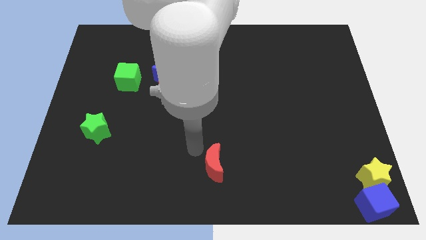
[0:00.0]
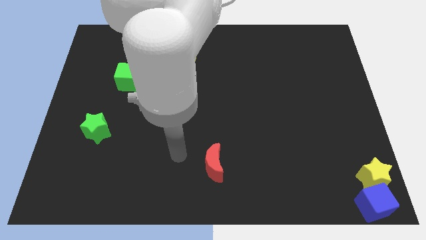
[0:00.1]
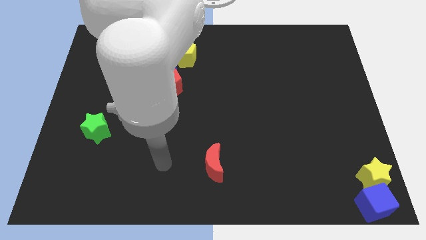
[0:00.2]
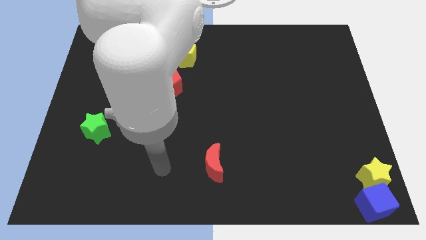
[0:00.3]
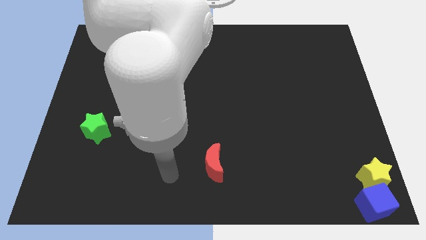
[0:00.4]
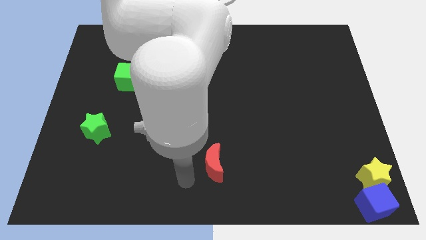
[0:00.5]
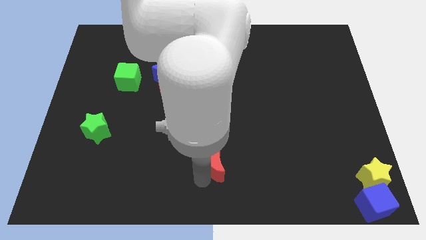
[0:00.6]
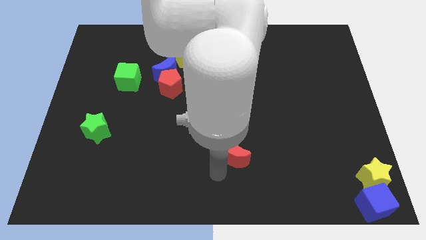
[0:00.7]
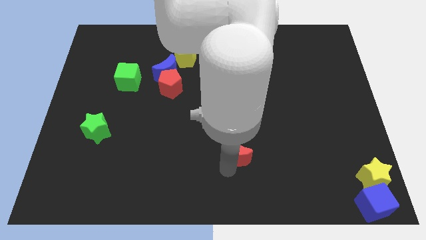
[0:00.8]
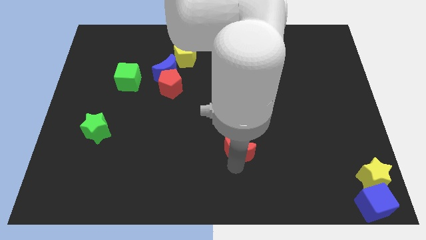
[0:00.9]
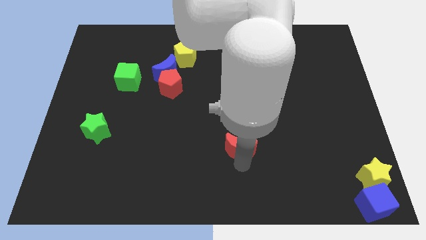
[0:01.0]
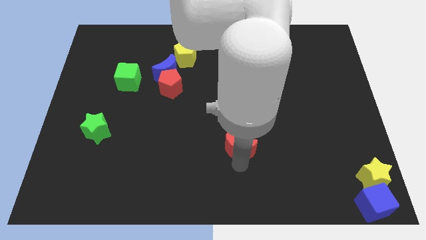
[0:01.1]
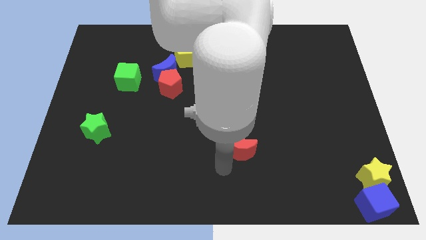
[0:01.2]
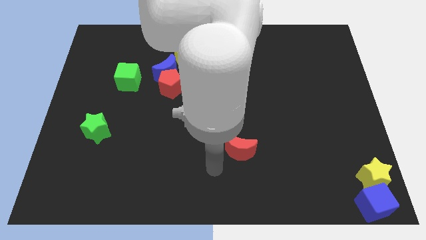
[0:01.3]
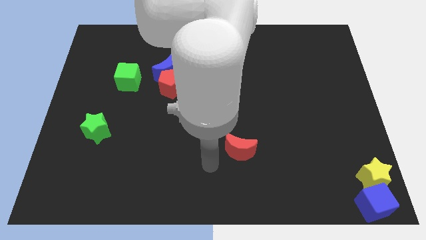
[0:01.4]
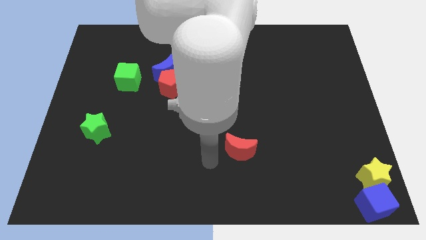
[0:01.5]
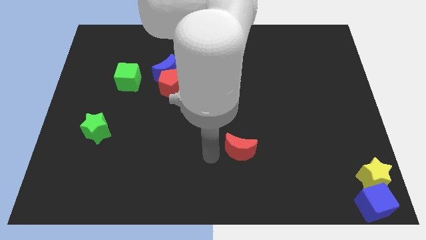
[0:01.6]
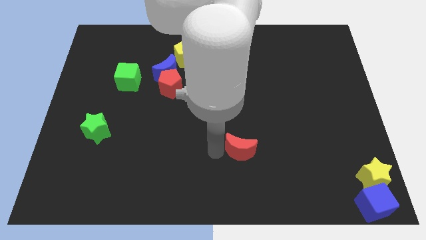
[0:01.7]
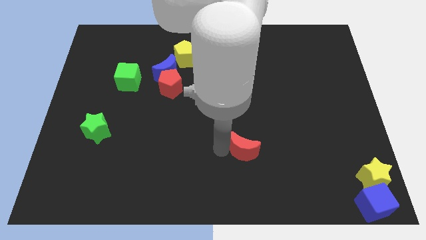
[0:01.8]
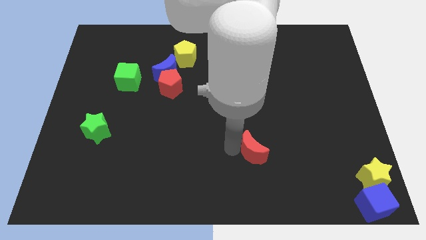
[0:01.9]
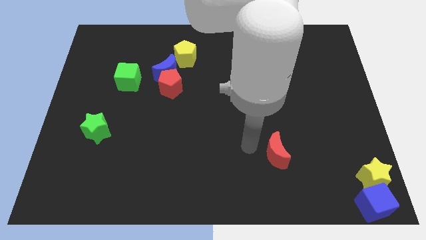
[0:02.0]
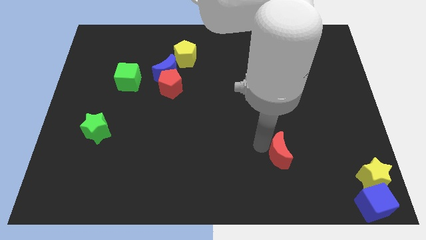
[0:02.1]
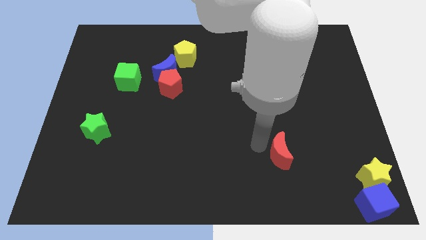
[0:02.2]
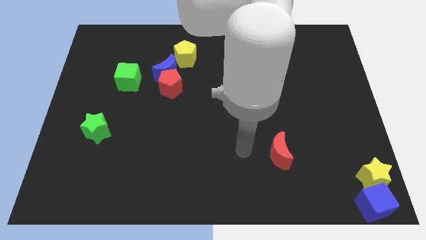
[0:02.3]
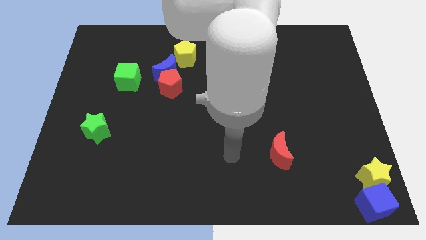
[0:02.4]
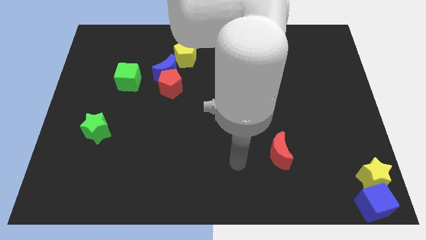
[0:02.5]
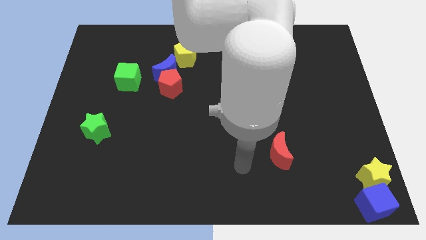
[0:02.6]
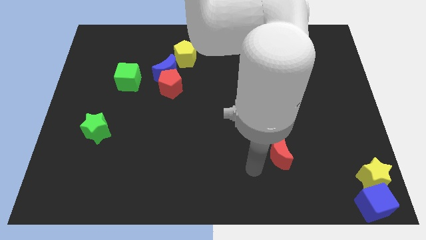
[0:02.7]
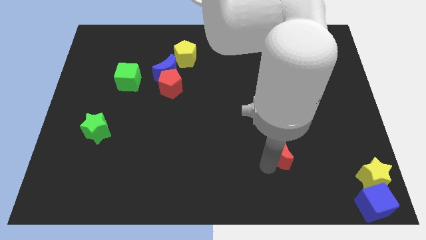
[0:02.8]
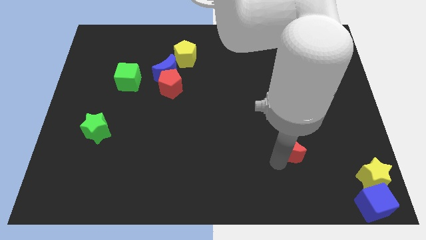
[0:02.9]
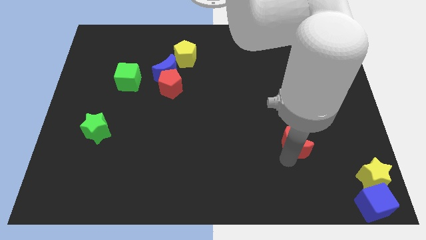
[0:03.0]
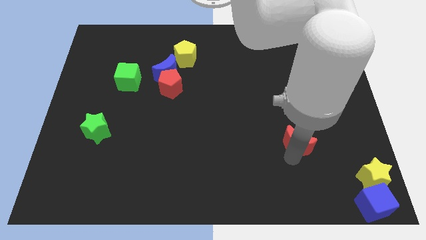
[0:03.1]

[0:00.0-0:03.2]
place the red crescent diagonal to the yellow star

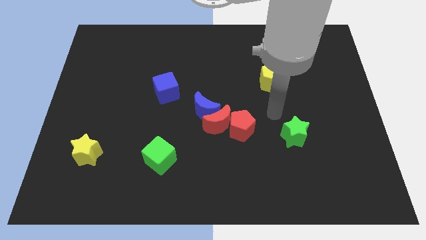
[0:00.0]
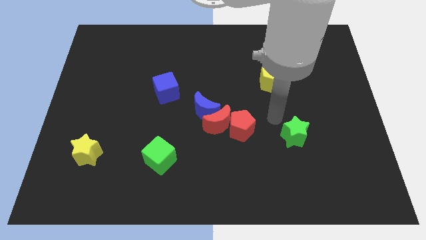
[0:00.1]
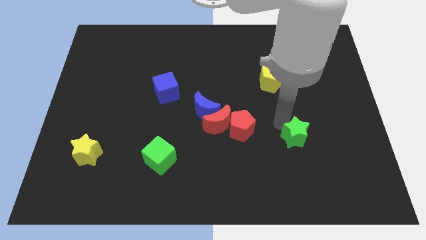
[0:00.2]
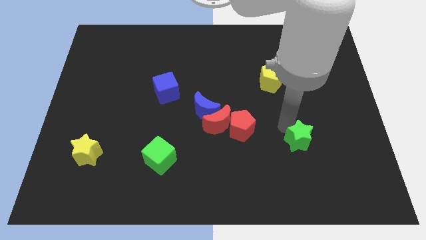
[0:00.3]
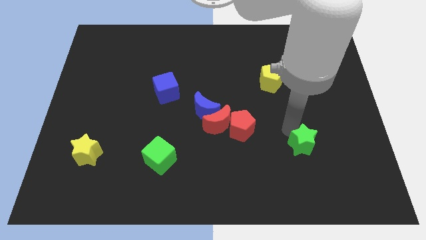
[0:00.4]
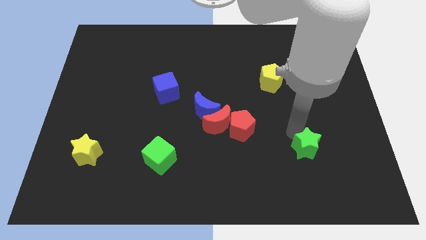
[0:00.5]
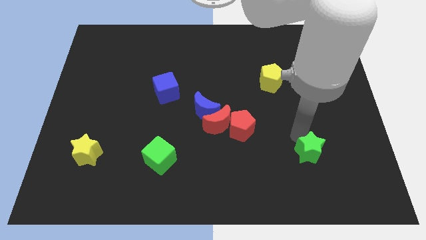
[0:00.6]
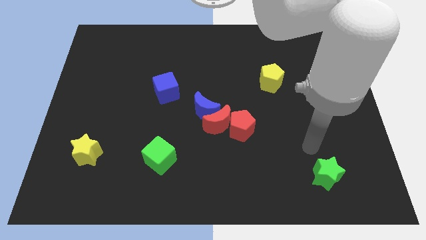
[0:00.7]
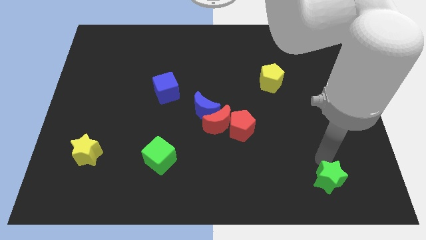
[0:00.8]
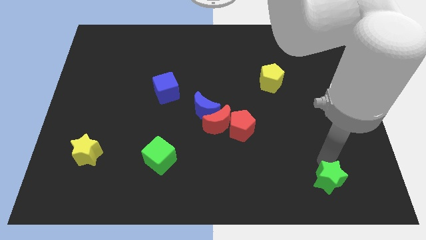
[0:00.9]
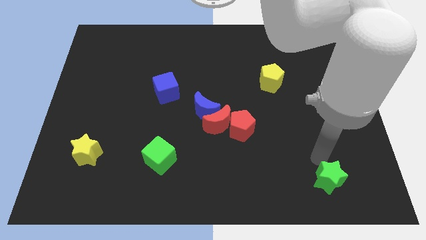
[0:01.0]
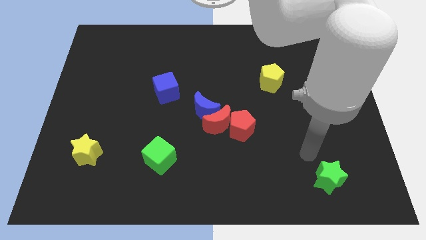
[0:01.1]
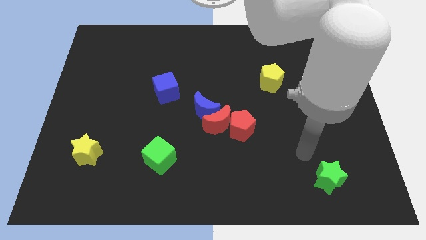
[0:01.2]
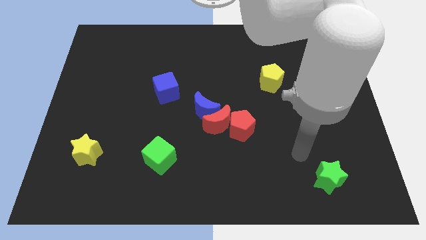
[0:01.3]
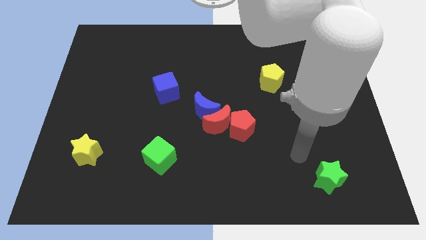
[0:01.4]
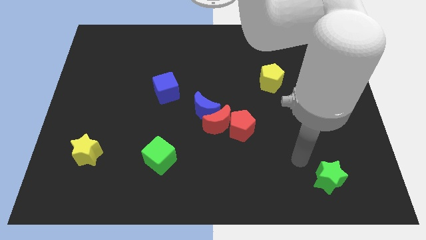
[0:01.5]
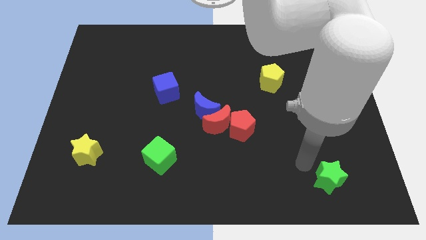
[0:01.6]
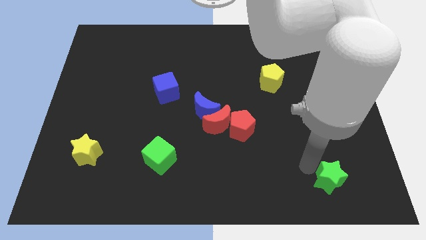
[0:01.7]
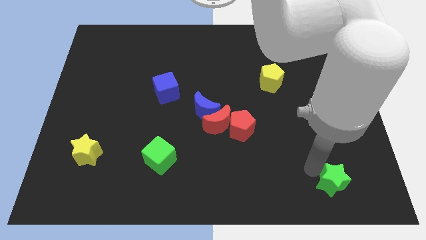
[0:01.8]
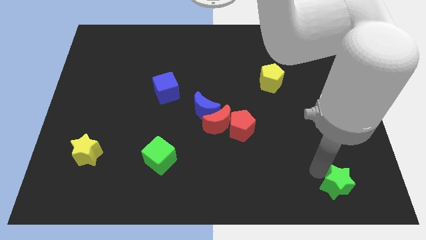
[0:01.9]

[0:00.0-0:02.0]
push the green star slightly to the bottom side of the board

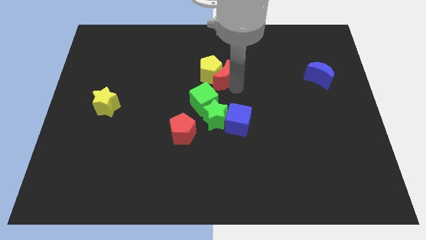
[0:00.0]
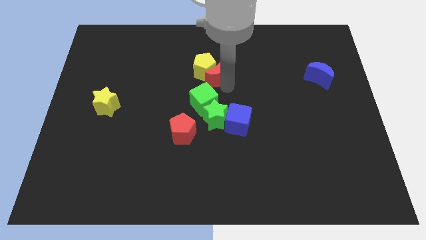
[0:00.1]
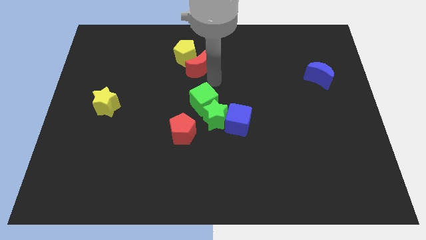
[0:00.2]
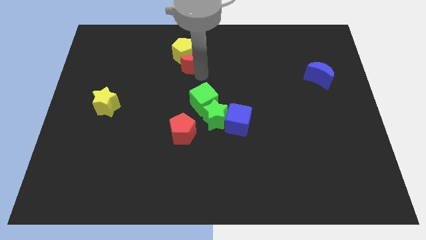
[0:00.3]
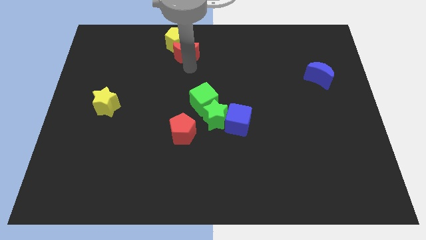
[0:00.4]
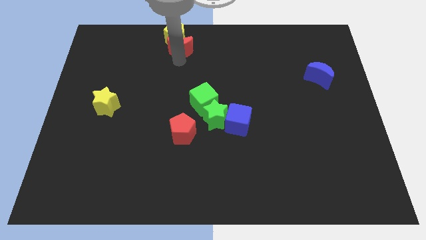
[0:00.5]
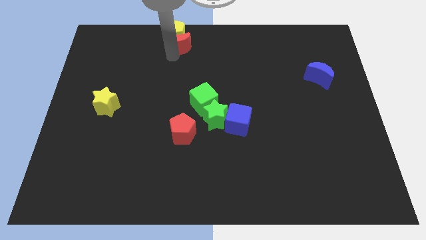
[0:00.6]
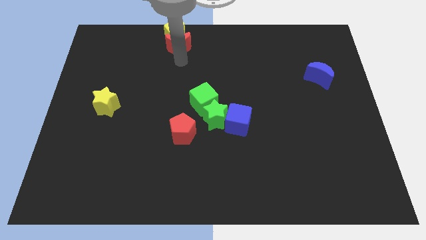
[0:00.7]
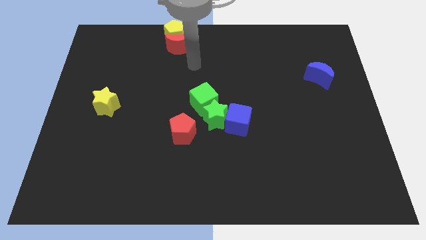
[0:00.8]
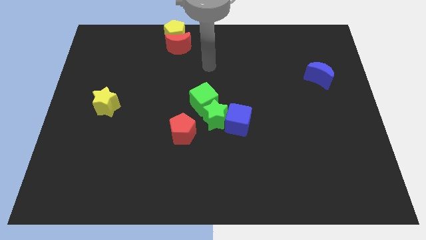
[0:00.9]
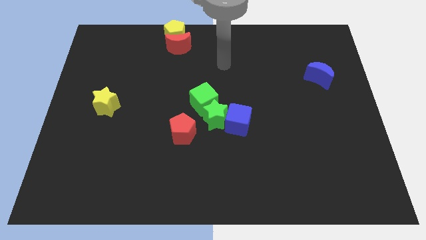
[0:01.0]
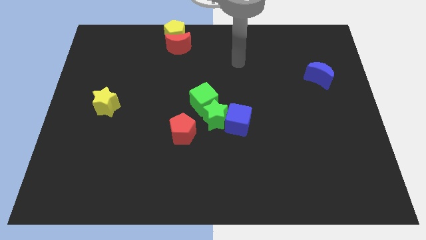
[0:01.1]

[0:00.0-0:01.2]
push the yellow pentagon and red moon towards the top side

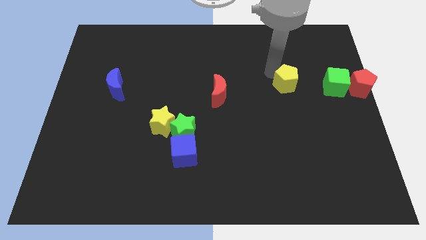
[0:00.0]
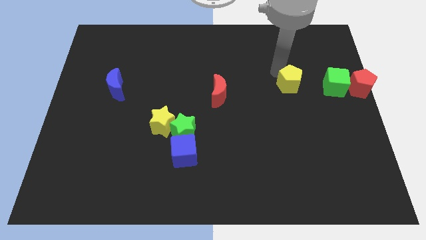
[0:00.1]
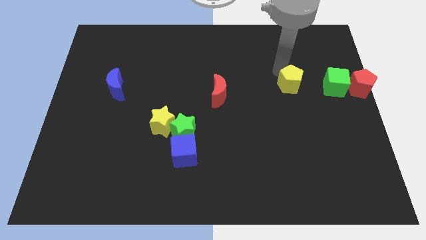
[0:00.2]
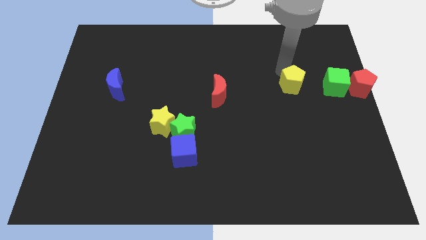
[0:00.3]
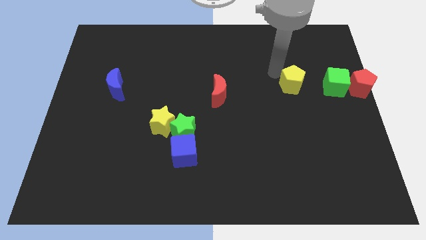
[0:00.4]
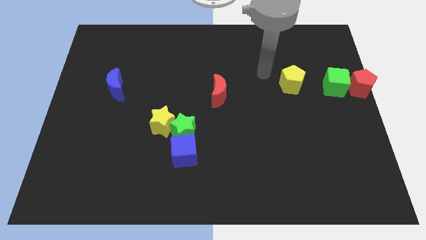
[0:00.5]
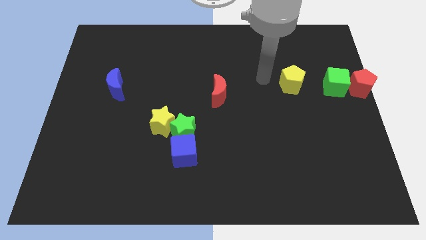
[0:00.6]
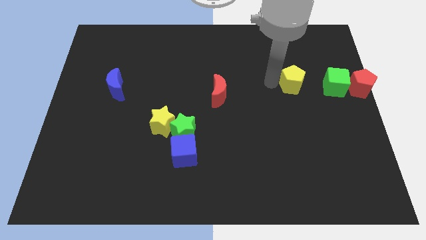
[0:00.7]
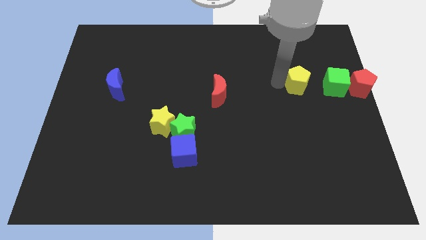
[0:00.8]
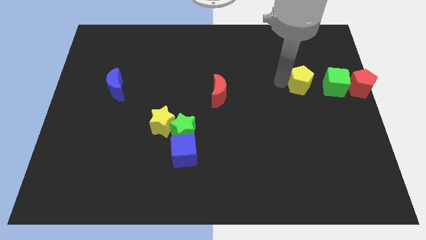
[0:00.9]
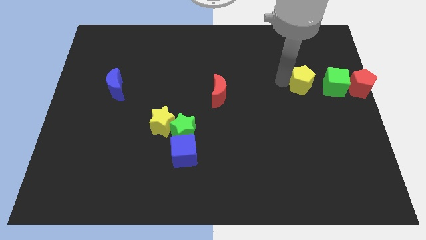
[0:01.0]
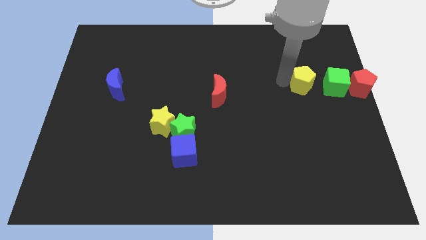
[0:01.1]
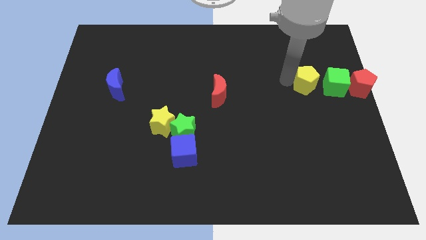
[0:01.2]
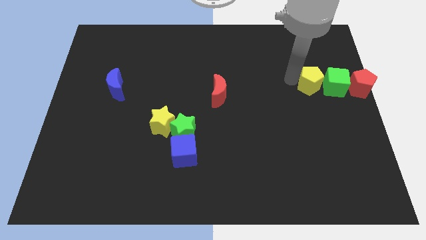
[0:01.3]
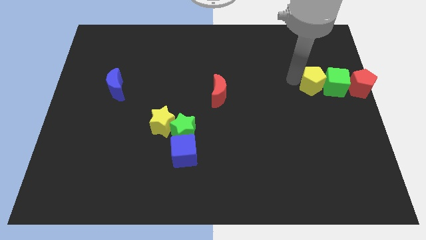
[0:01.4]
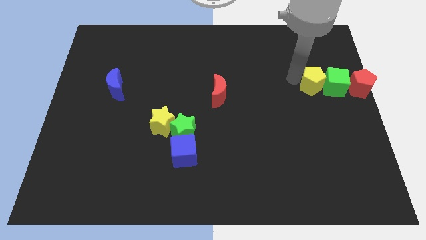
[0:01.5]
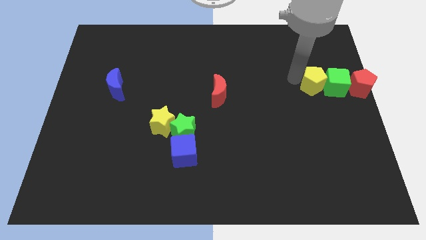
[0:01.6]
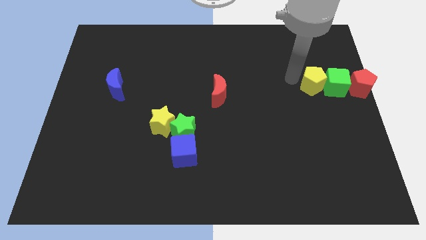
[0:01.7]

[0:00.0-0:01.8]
move the yellow pentagon left to the green cube

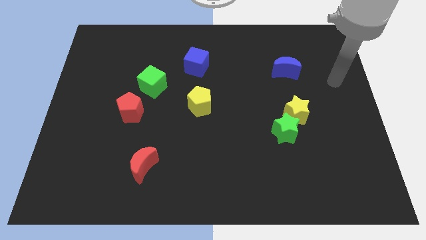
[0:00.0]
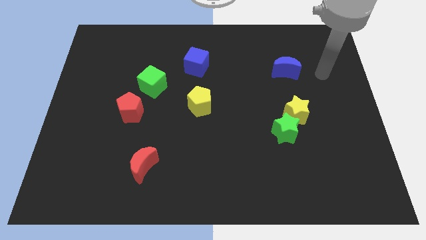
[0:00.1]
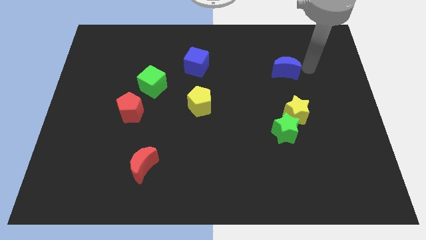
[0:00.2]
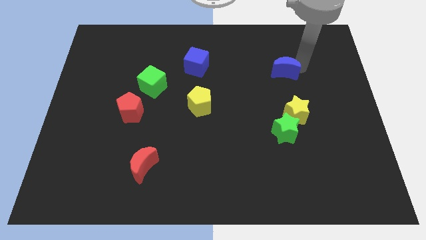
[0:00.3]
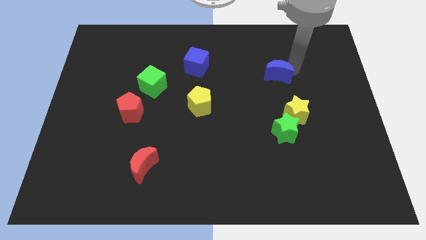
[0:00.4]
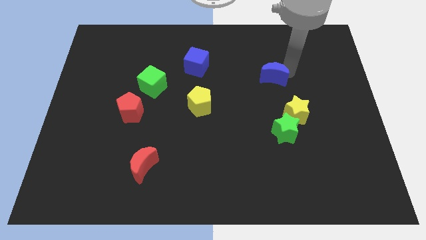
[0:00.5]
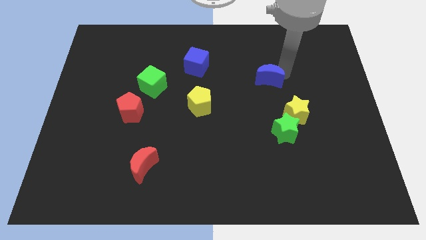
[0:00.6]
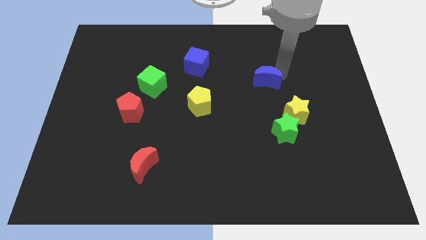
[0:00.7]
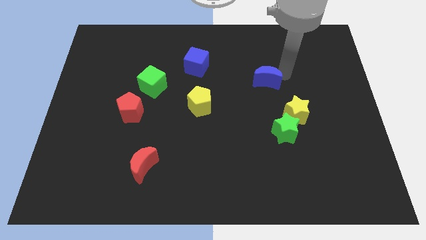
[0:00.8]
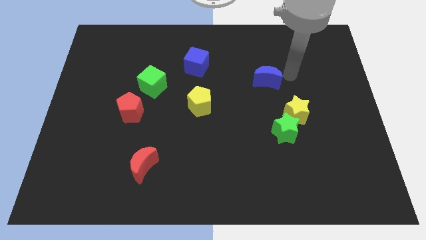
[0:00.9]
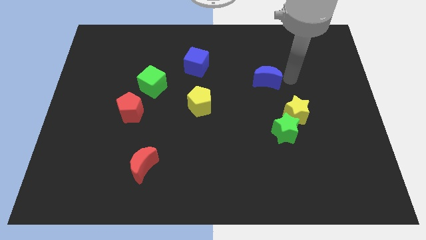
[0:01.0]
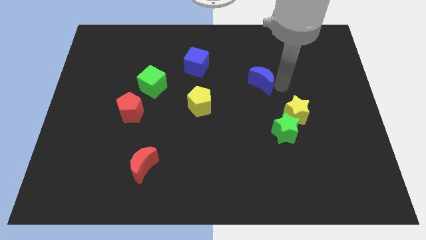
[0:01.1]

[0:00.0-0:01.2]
push the red moon downwards slightly
